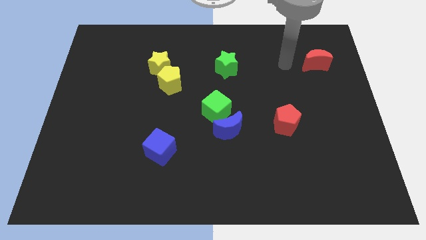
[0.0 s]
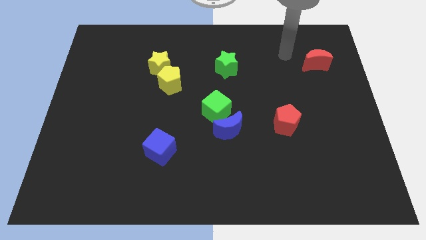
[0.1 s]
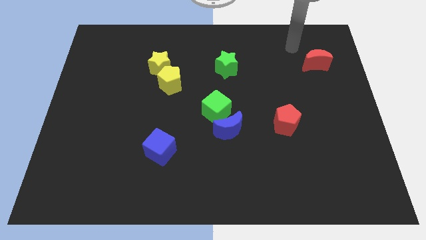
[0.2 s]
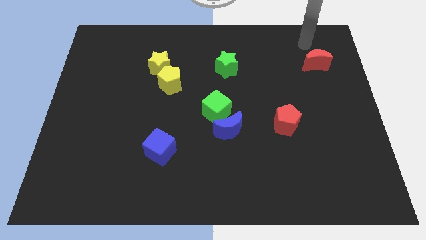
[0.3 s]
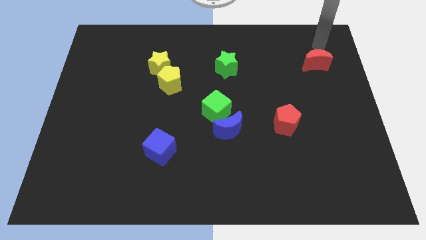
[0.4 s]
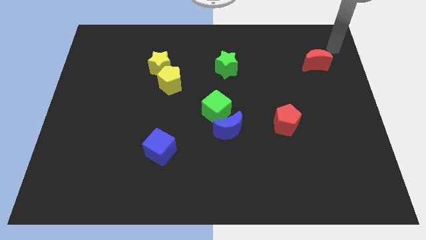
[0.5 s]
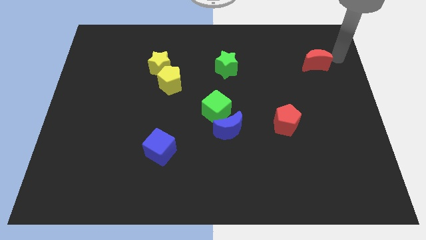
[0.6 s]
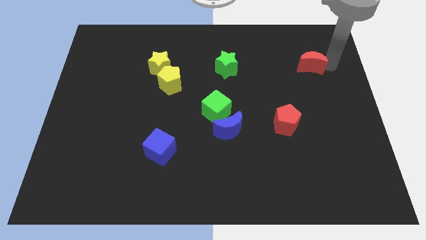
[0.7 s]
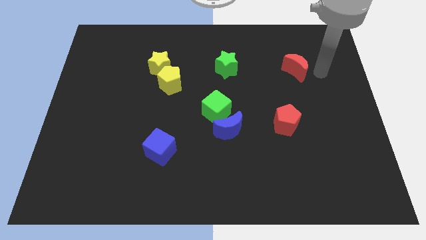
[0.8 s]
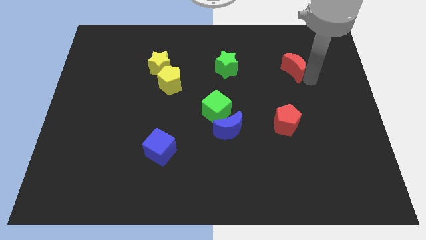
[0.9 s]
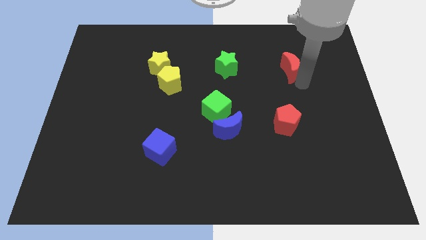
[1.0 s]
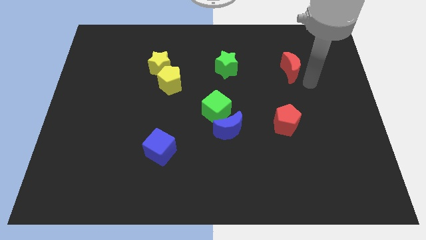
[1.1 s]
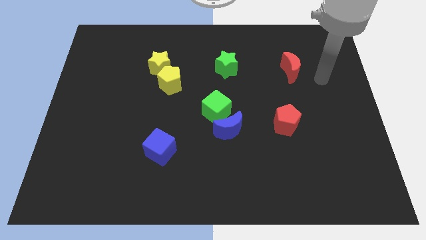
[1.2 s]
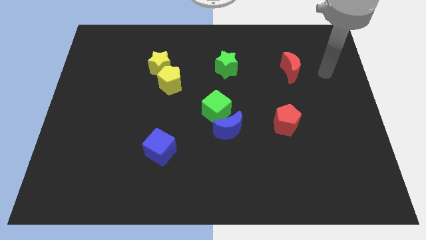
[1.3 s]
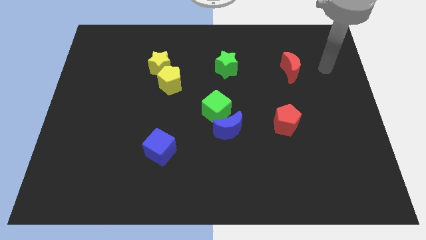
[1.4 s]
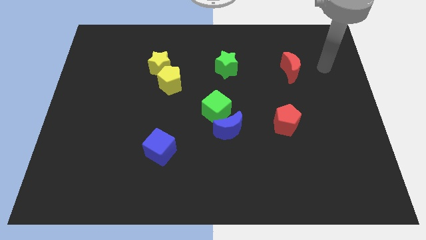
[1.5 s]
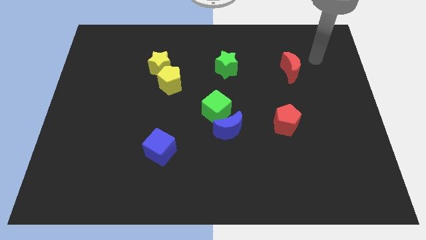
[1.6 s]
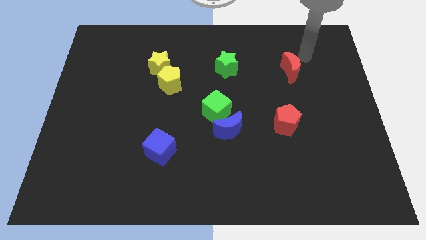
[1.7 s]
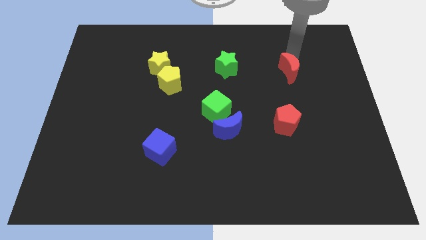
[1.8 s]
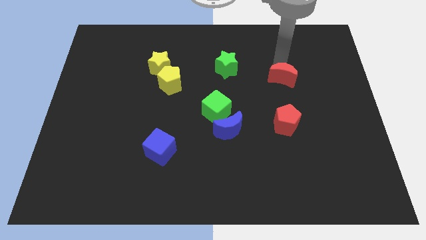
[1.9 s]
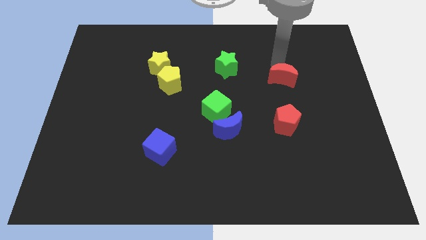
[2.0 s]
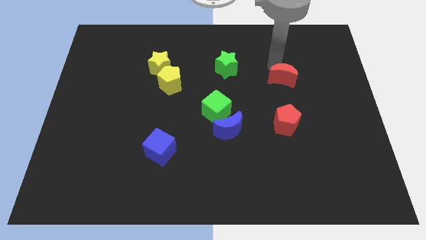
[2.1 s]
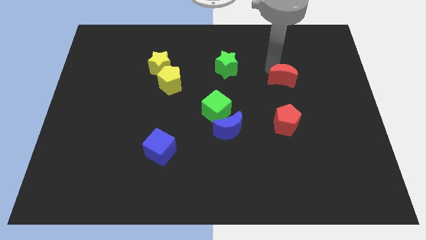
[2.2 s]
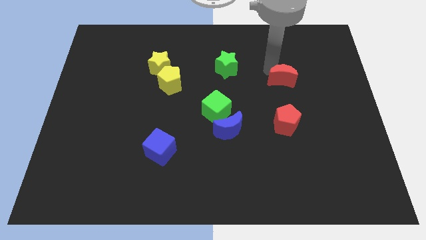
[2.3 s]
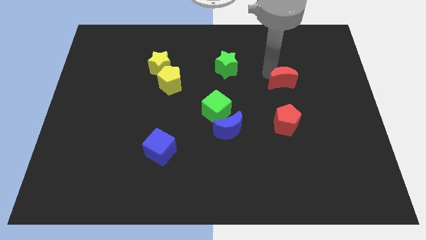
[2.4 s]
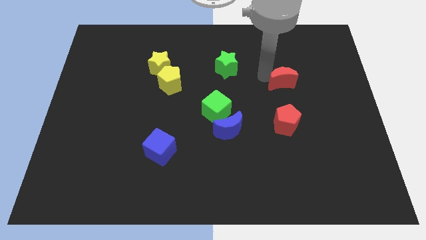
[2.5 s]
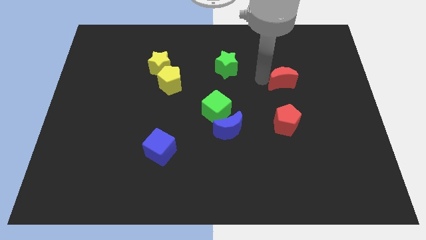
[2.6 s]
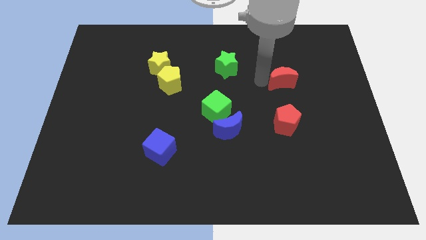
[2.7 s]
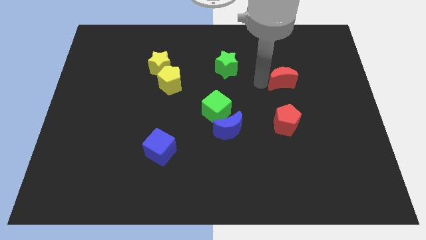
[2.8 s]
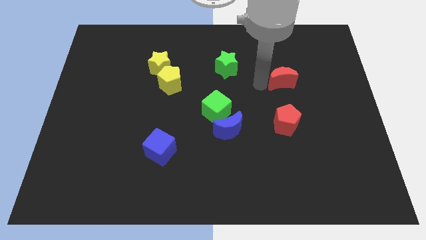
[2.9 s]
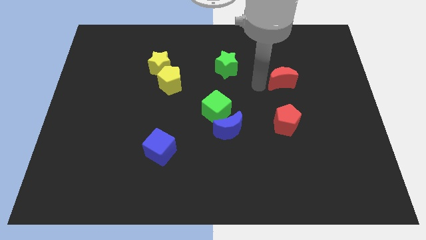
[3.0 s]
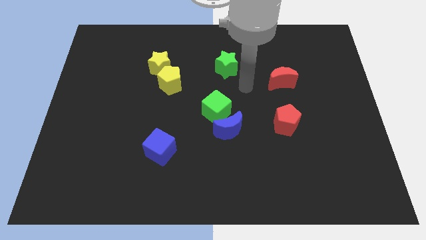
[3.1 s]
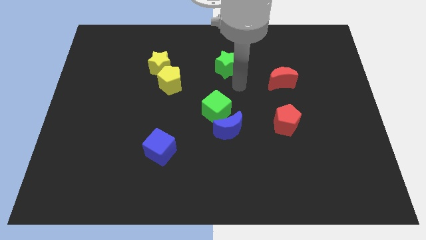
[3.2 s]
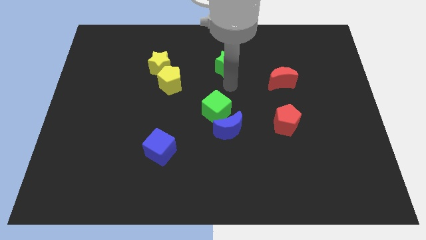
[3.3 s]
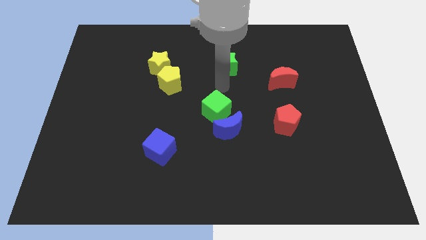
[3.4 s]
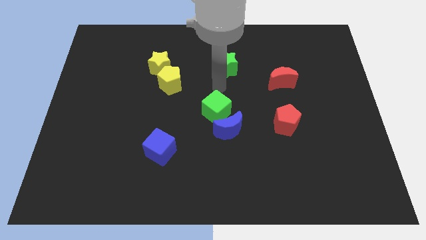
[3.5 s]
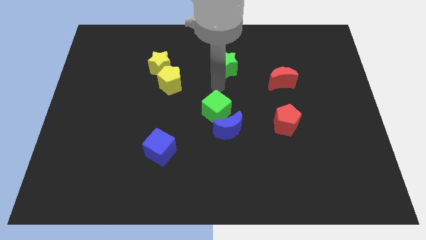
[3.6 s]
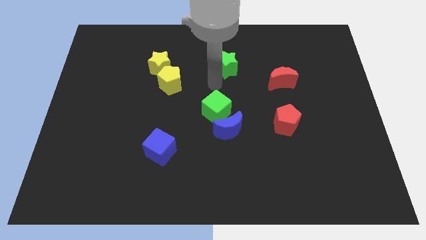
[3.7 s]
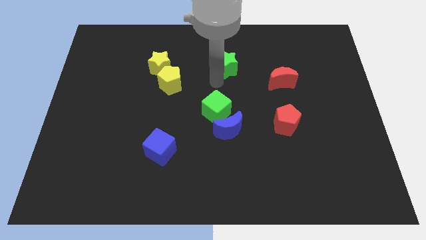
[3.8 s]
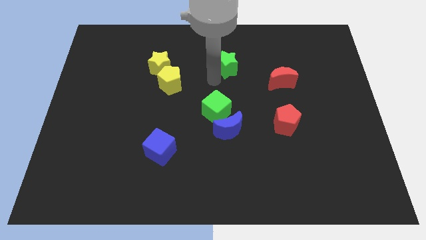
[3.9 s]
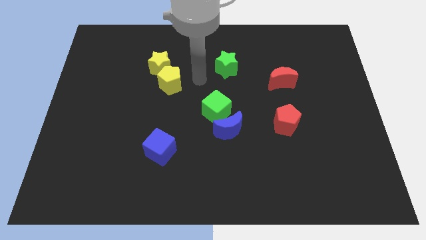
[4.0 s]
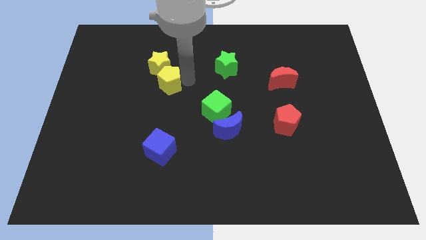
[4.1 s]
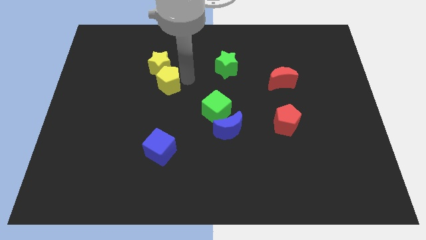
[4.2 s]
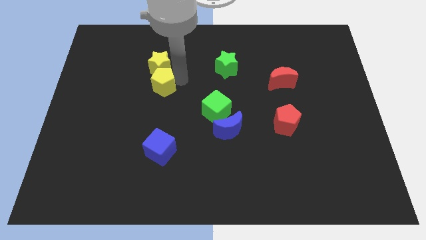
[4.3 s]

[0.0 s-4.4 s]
place the red crescent on the top of red pentagon

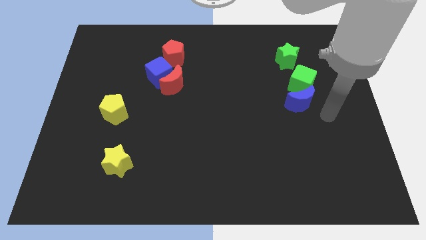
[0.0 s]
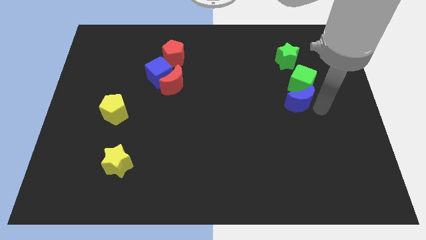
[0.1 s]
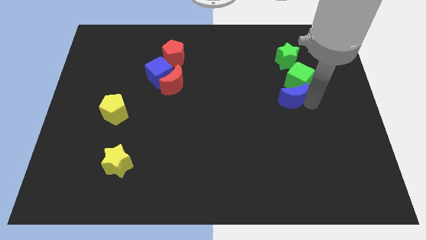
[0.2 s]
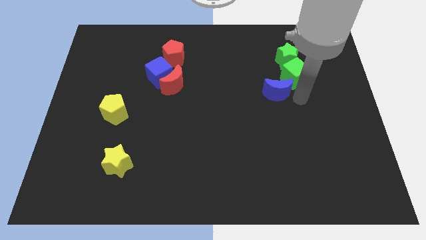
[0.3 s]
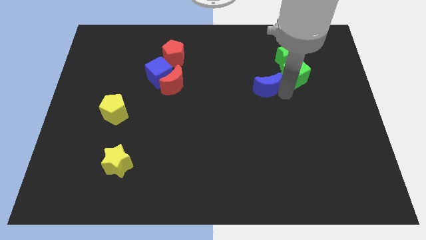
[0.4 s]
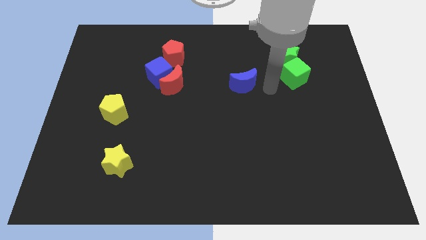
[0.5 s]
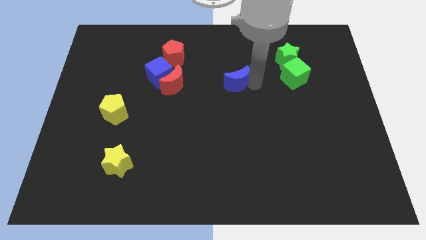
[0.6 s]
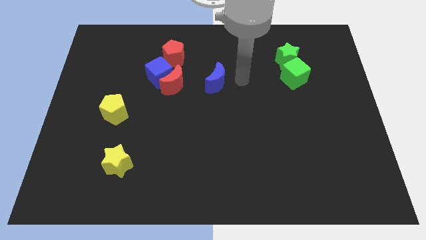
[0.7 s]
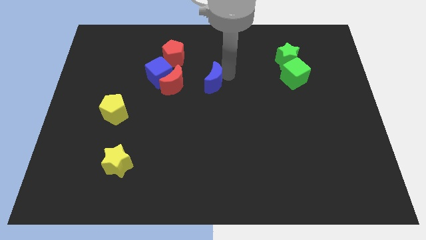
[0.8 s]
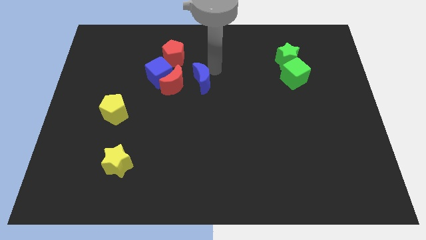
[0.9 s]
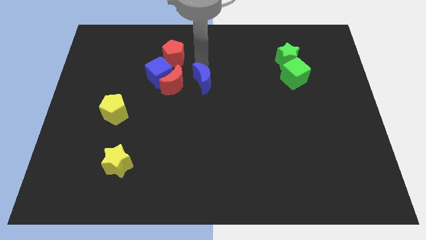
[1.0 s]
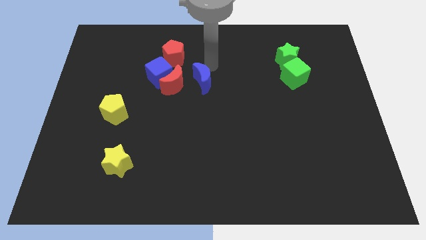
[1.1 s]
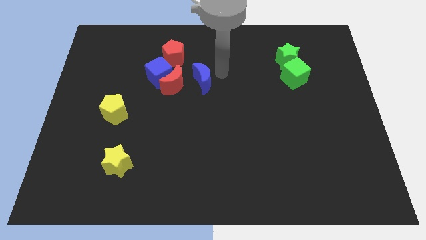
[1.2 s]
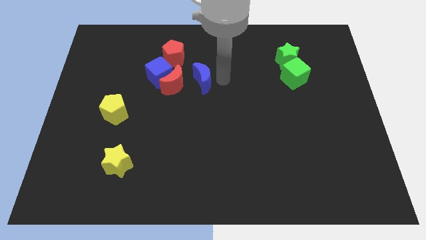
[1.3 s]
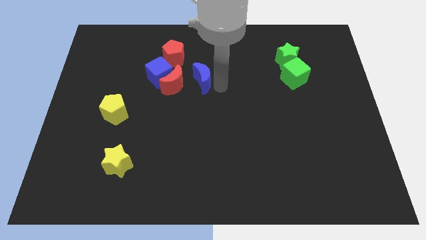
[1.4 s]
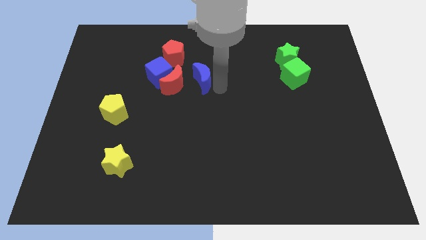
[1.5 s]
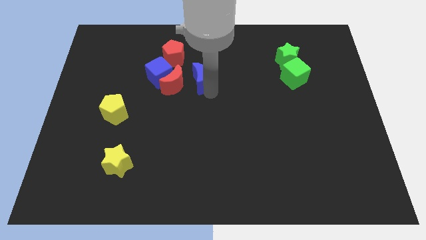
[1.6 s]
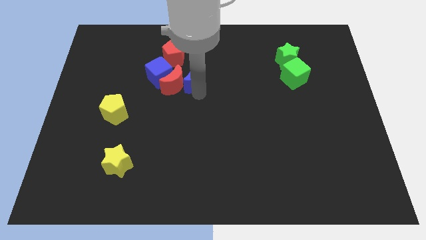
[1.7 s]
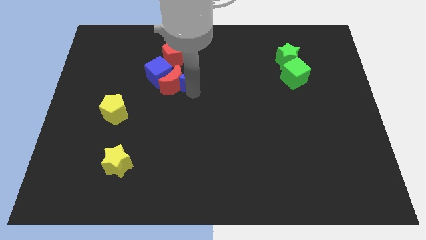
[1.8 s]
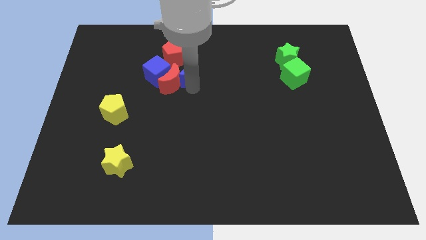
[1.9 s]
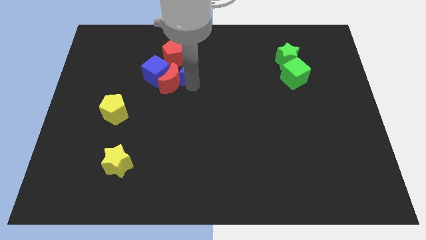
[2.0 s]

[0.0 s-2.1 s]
move the blue moon into the red moon

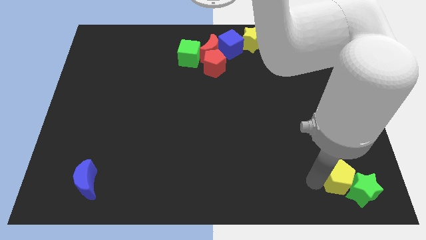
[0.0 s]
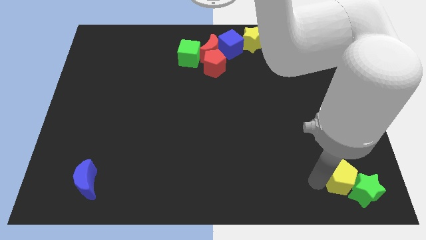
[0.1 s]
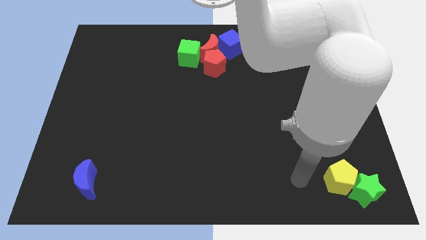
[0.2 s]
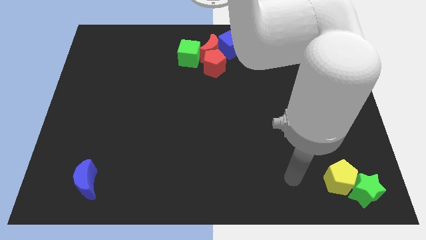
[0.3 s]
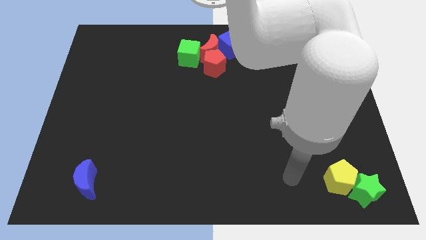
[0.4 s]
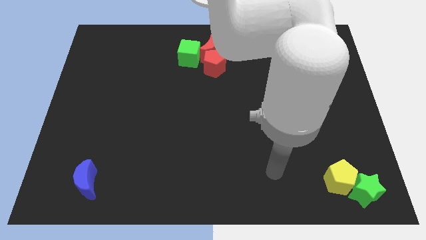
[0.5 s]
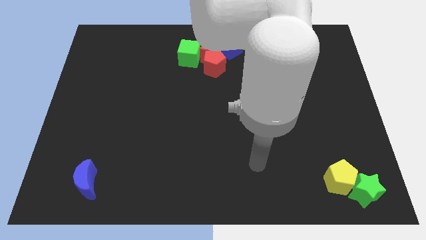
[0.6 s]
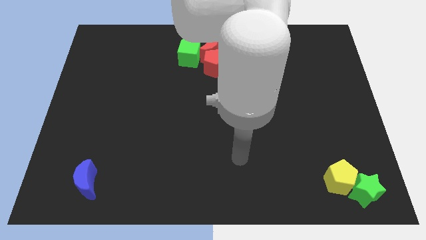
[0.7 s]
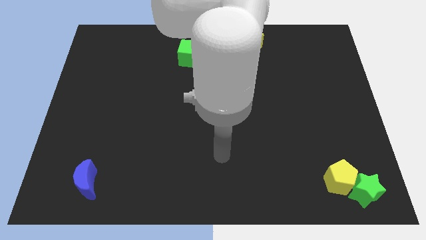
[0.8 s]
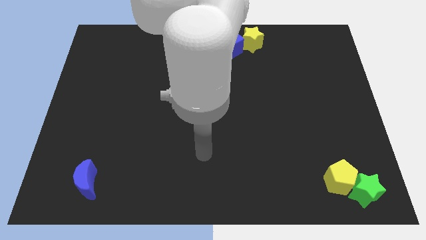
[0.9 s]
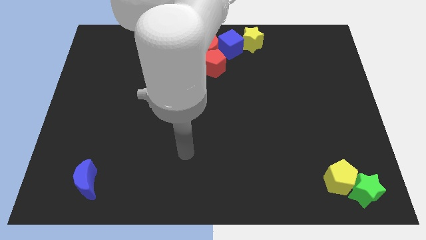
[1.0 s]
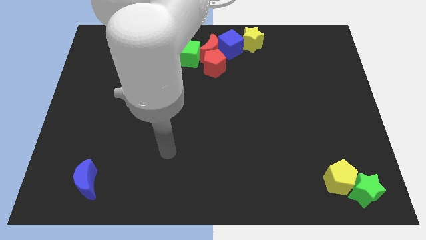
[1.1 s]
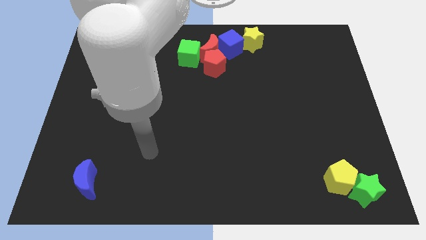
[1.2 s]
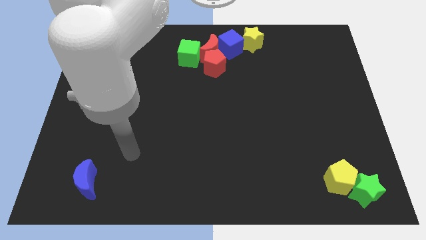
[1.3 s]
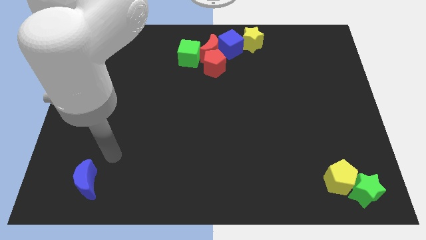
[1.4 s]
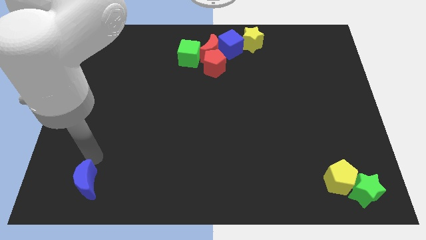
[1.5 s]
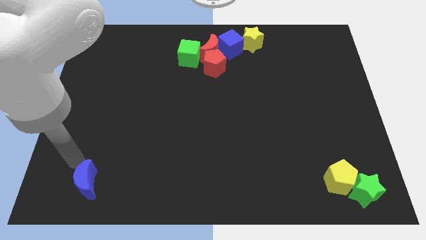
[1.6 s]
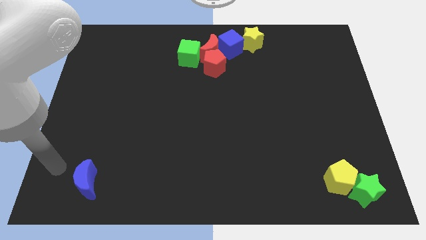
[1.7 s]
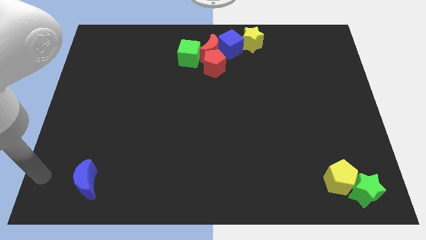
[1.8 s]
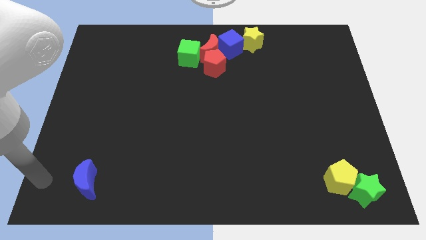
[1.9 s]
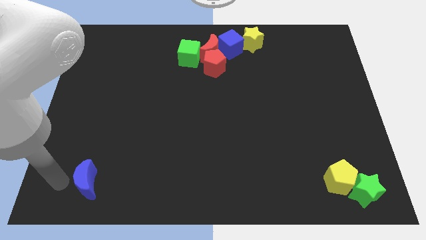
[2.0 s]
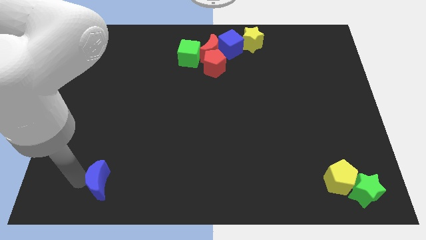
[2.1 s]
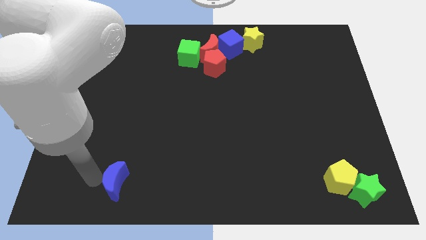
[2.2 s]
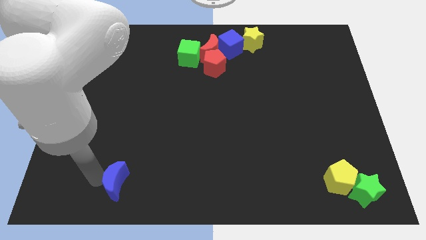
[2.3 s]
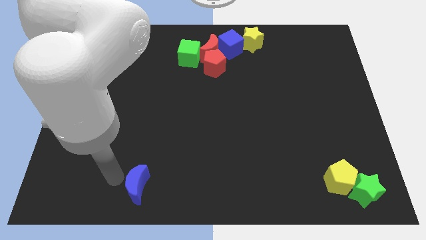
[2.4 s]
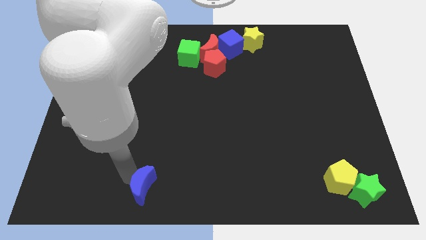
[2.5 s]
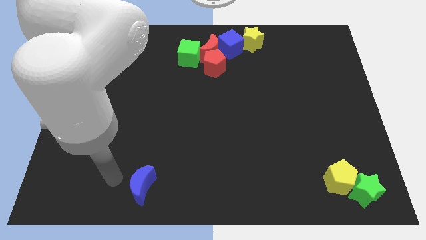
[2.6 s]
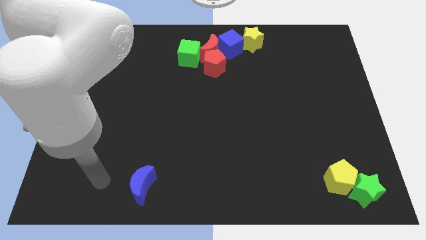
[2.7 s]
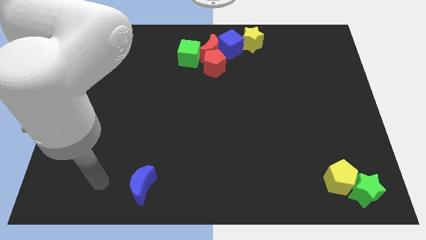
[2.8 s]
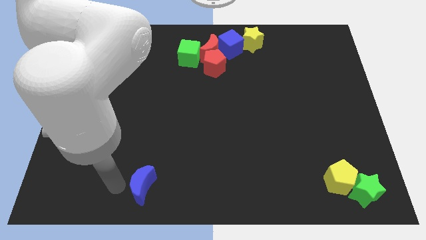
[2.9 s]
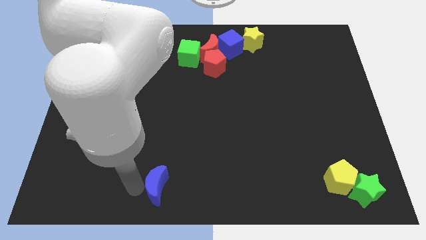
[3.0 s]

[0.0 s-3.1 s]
push the blue crescent to the bottom center of the board
